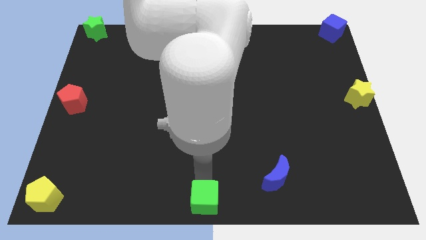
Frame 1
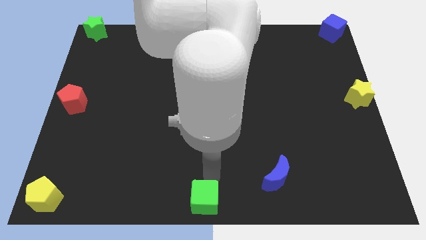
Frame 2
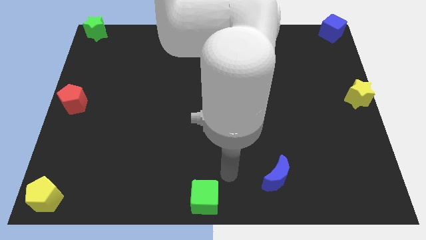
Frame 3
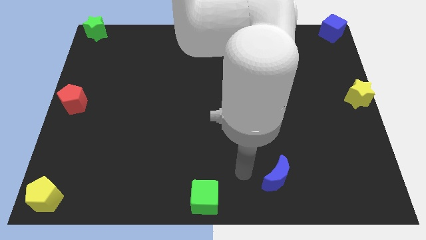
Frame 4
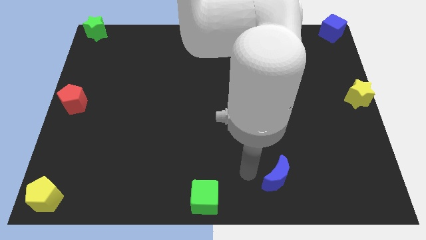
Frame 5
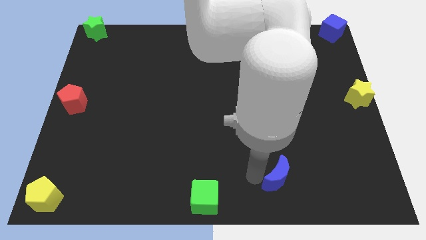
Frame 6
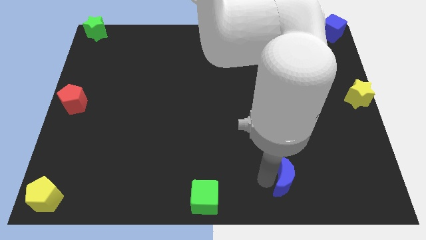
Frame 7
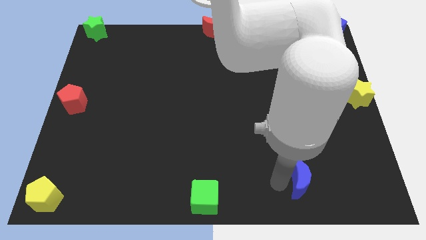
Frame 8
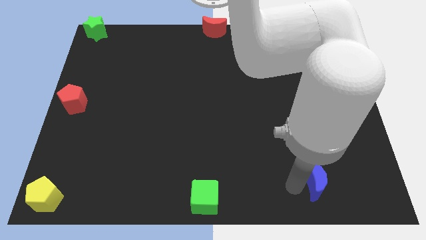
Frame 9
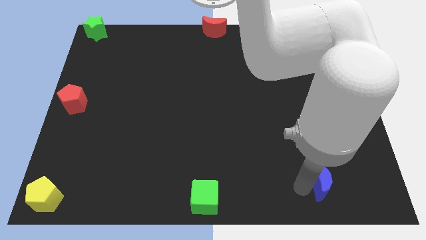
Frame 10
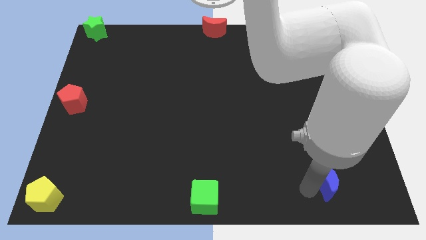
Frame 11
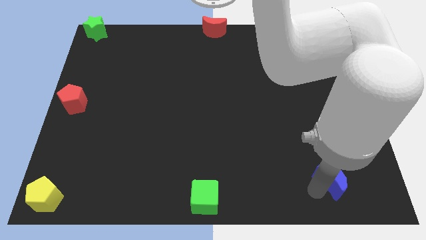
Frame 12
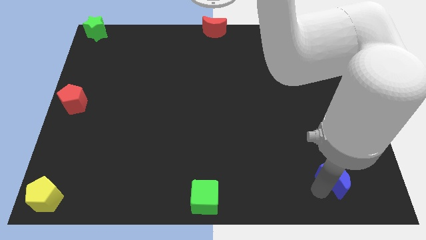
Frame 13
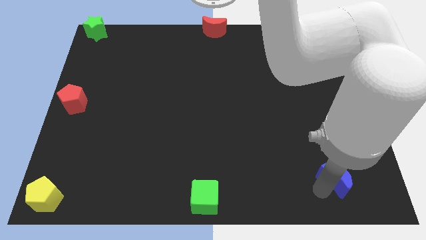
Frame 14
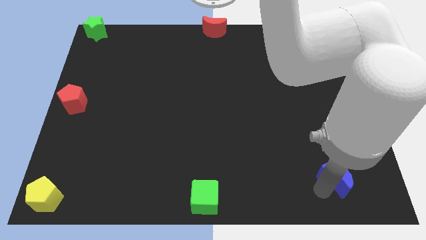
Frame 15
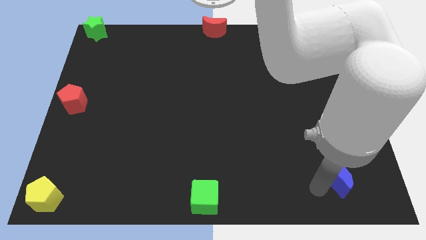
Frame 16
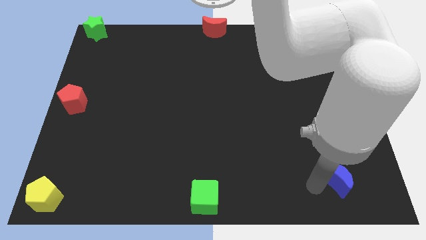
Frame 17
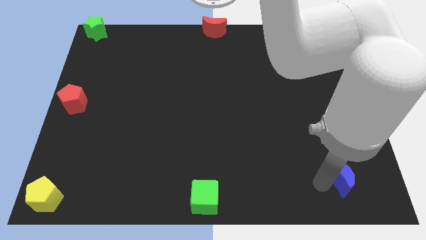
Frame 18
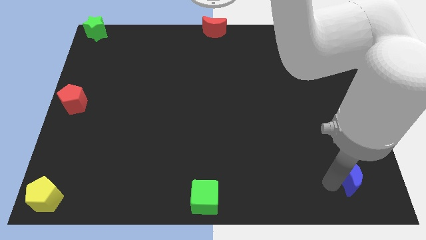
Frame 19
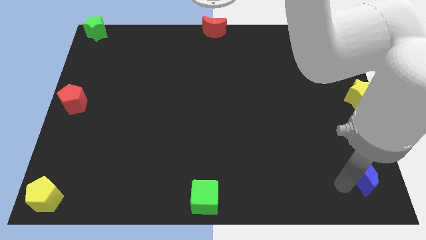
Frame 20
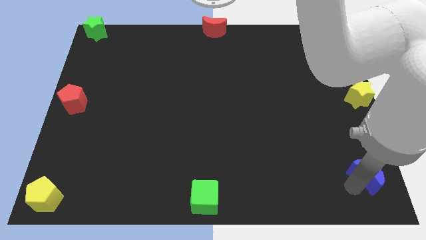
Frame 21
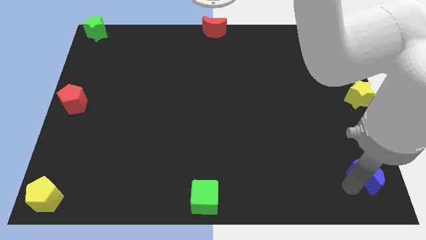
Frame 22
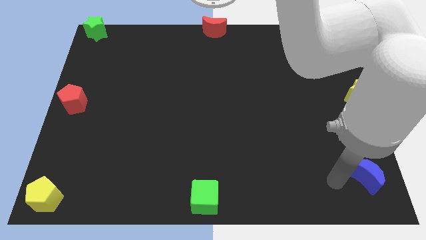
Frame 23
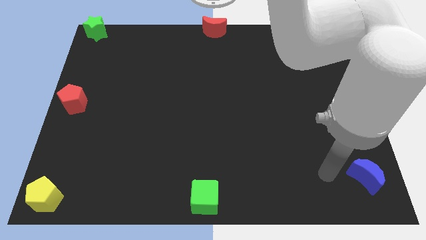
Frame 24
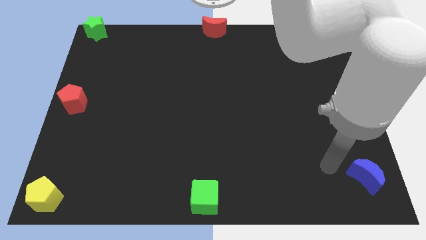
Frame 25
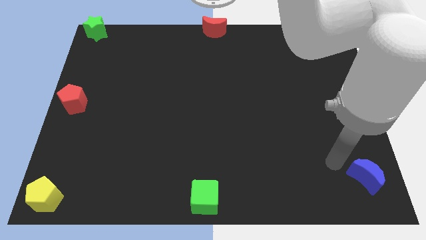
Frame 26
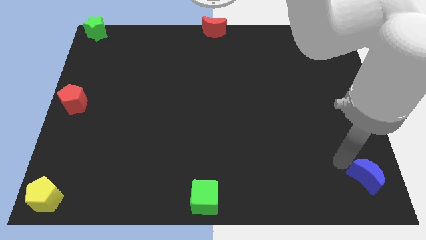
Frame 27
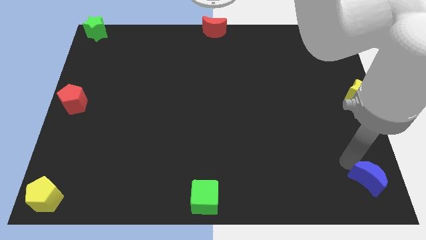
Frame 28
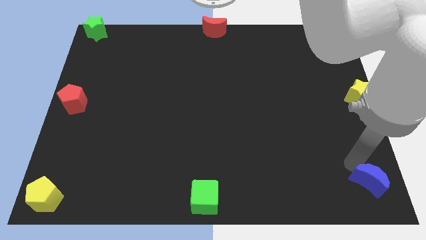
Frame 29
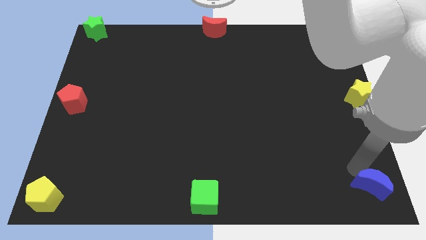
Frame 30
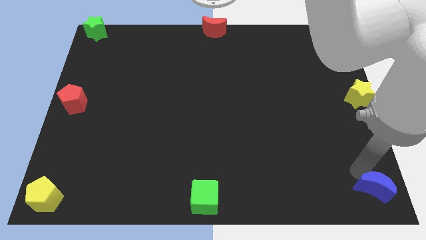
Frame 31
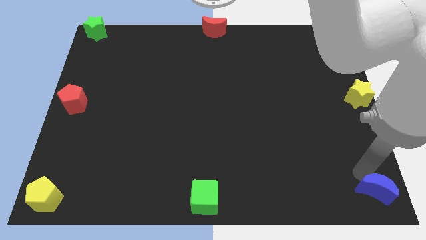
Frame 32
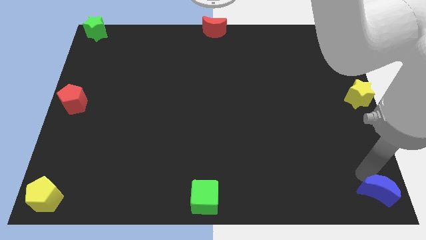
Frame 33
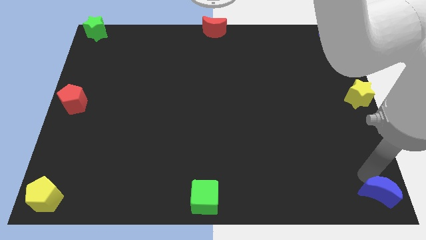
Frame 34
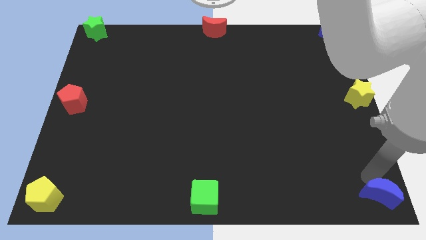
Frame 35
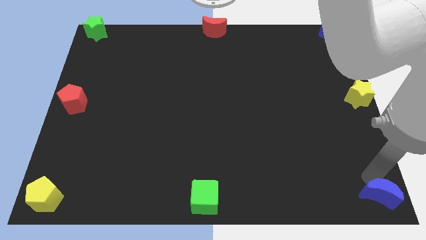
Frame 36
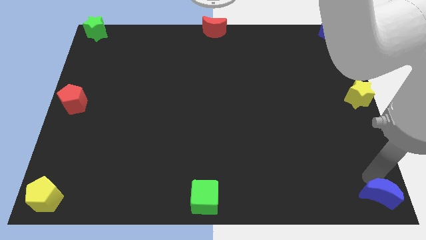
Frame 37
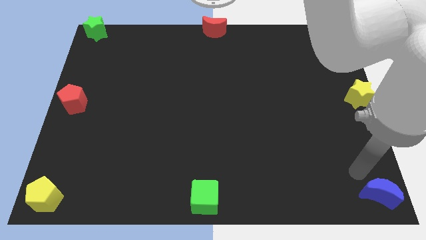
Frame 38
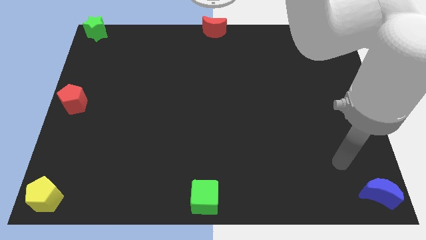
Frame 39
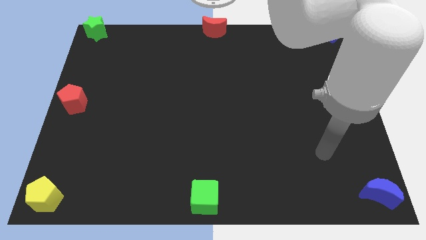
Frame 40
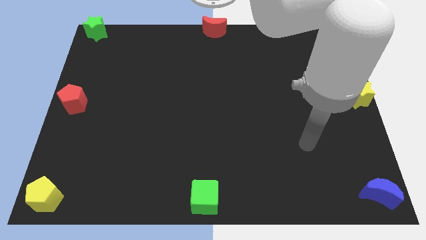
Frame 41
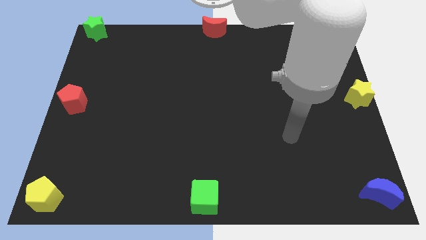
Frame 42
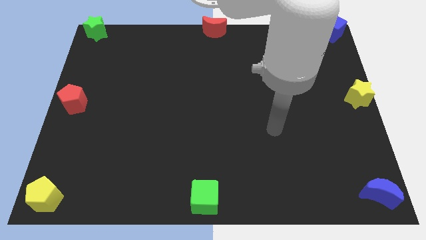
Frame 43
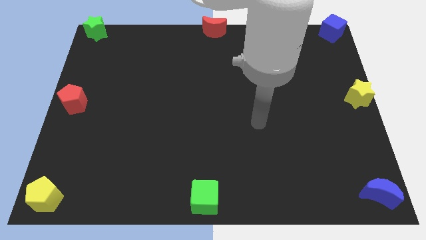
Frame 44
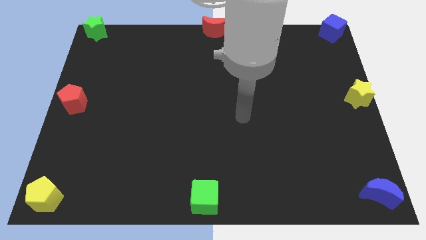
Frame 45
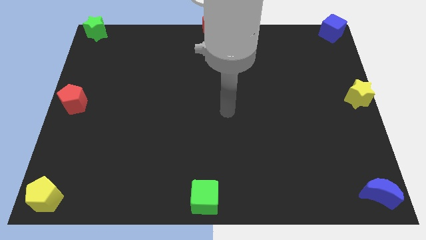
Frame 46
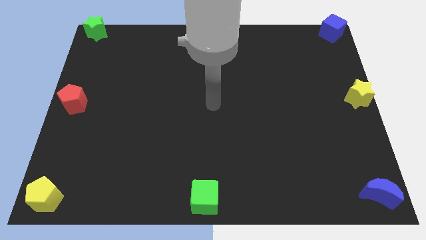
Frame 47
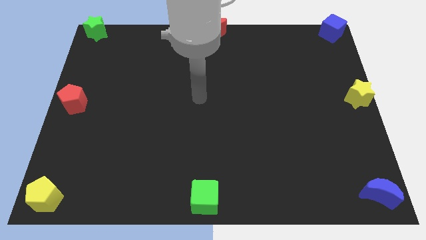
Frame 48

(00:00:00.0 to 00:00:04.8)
move the blue crescent to the bottom right of the board

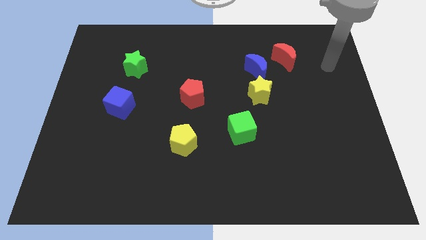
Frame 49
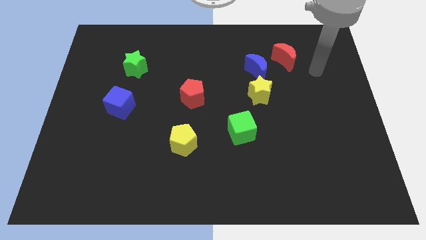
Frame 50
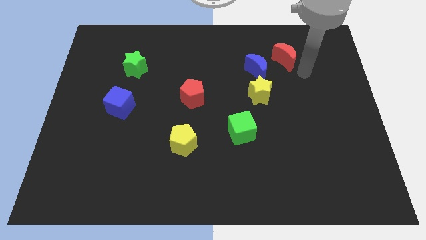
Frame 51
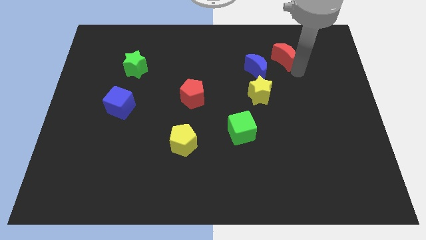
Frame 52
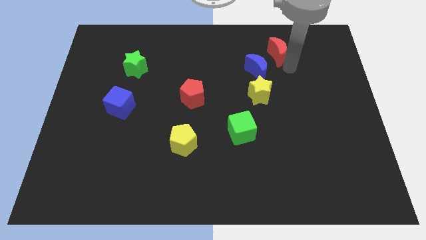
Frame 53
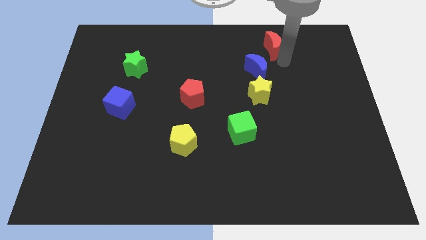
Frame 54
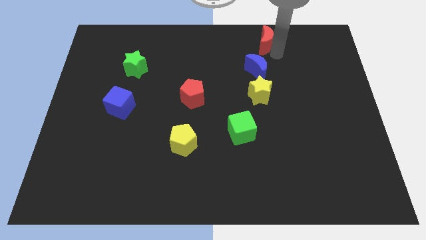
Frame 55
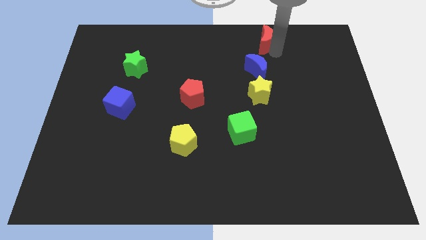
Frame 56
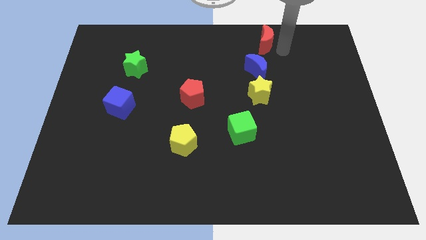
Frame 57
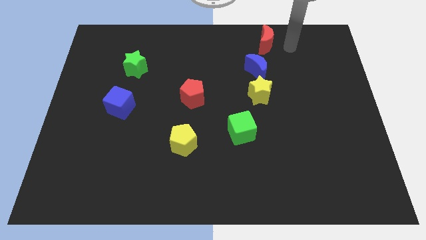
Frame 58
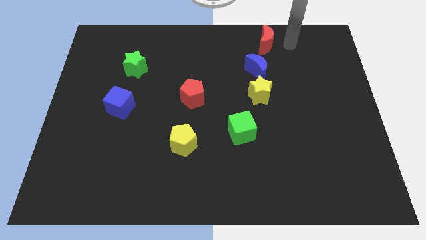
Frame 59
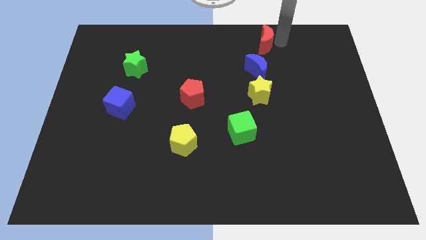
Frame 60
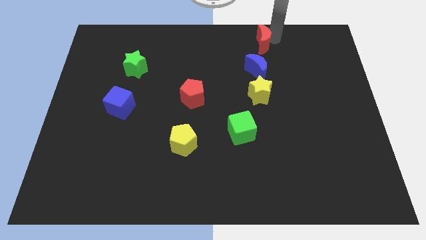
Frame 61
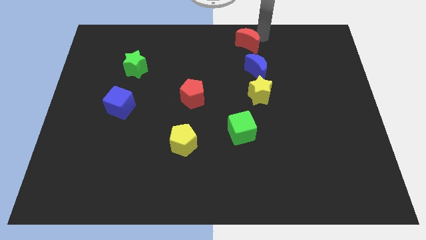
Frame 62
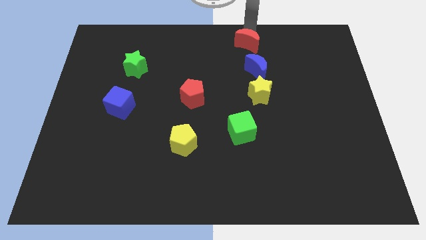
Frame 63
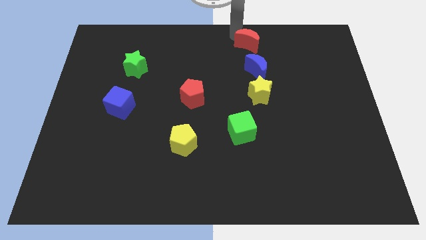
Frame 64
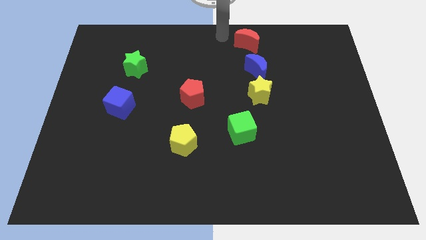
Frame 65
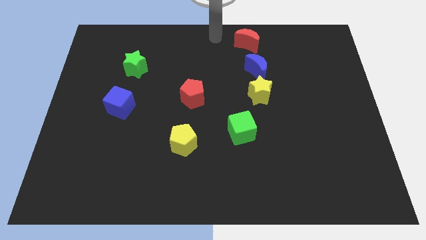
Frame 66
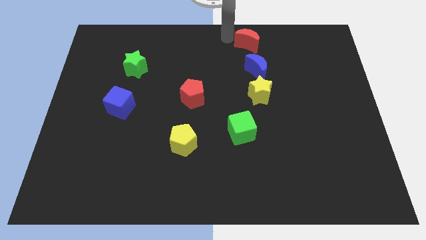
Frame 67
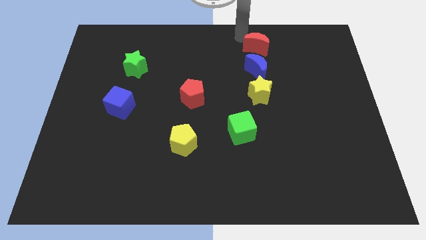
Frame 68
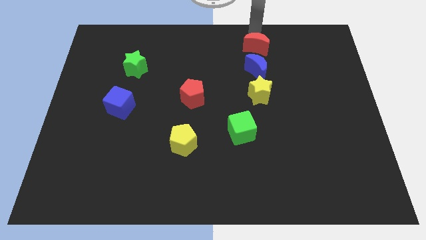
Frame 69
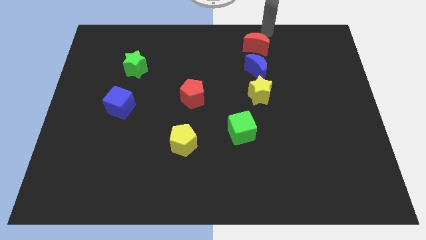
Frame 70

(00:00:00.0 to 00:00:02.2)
place red moon on top of blue moon

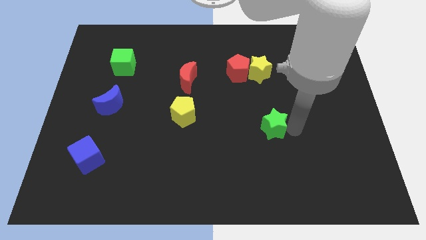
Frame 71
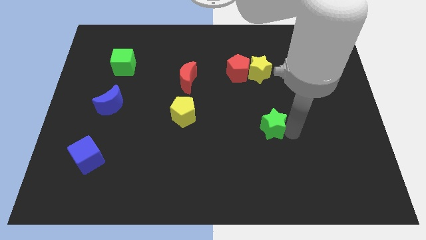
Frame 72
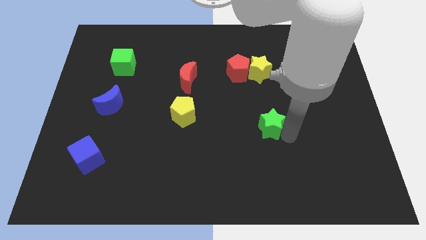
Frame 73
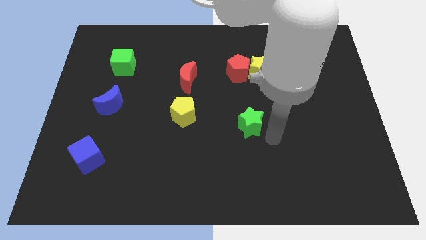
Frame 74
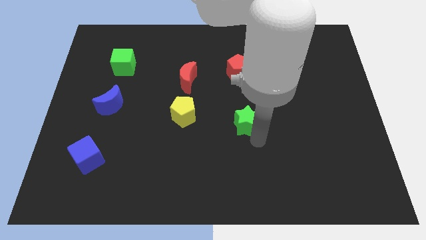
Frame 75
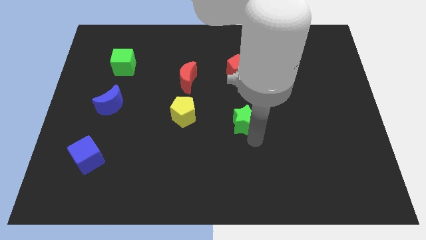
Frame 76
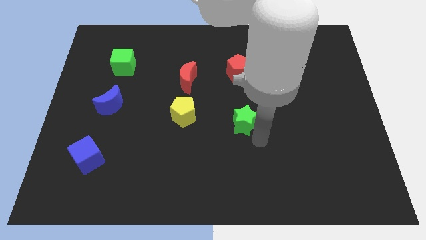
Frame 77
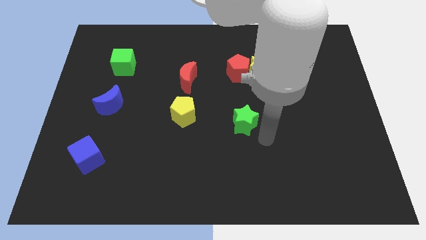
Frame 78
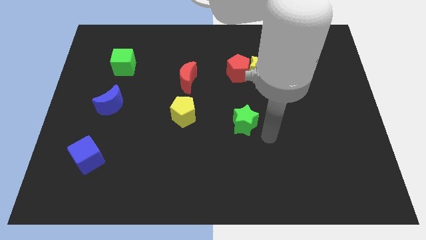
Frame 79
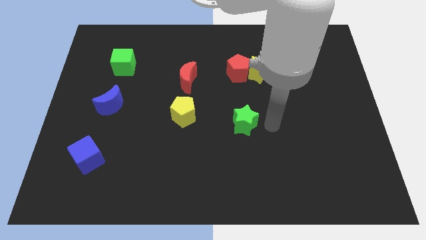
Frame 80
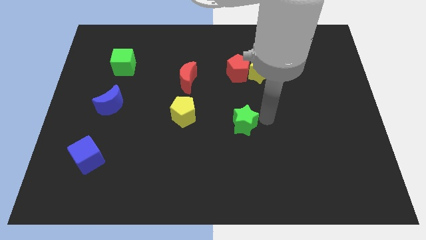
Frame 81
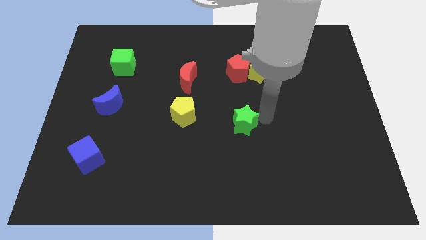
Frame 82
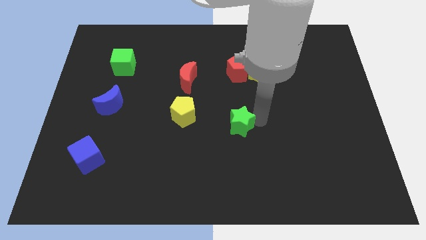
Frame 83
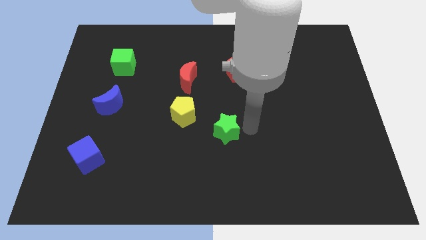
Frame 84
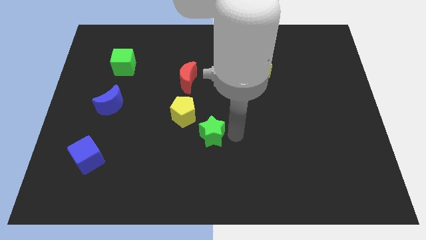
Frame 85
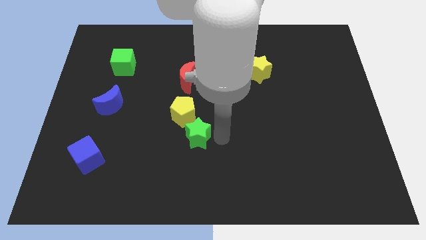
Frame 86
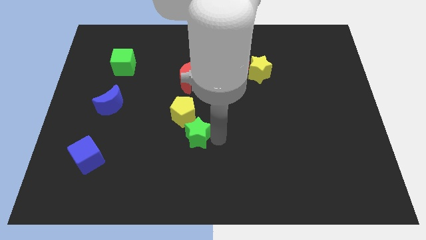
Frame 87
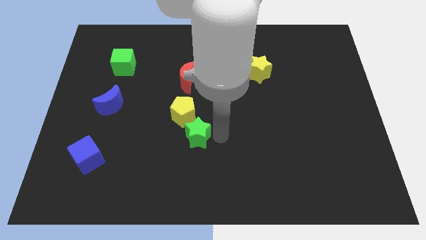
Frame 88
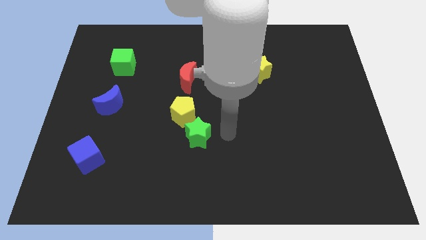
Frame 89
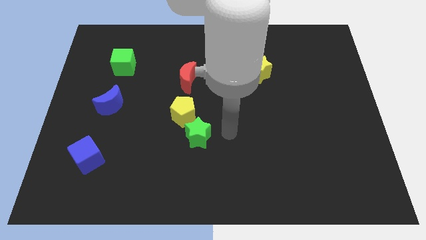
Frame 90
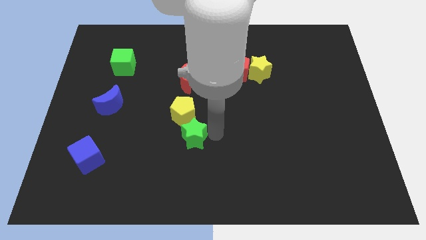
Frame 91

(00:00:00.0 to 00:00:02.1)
push green start below yellow pentagon
